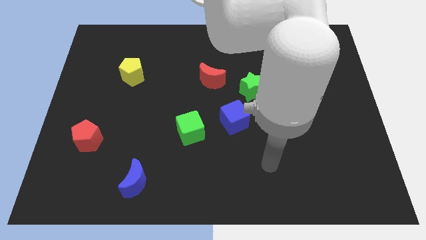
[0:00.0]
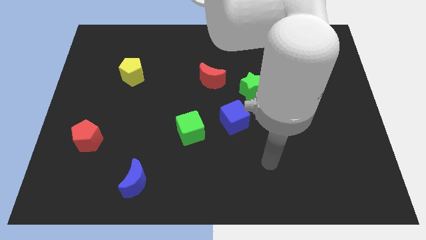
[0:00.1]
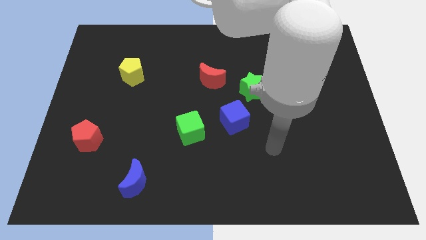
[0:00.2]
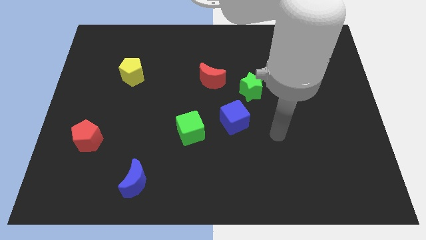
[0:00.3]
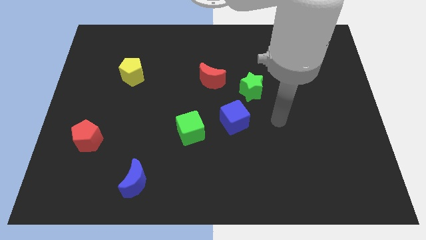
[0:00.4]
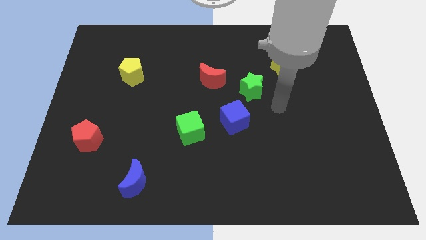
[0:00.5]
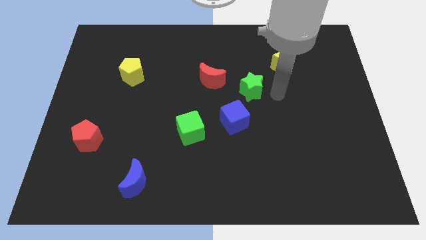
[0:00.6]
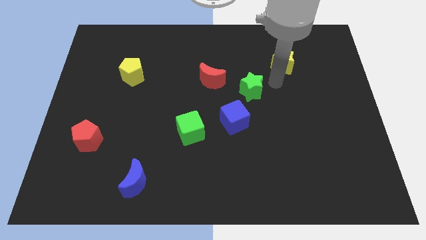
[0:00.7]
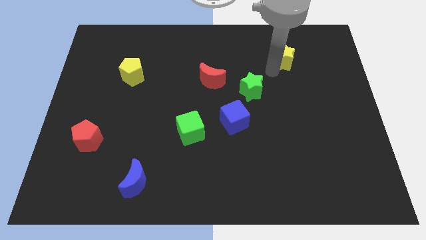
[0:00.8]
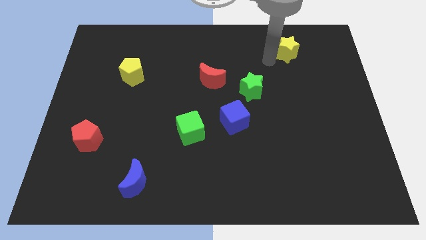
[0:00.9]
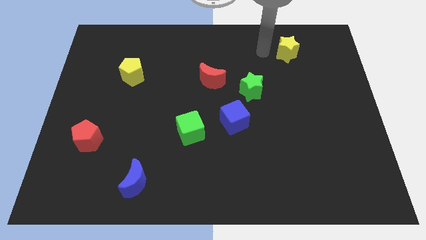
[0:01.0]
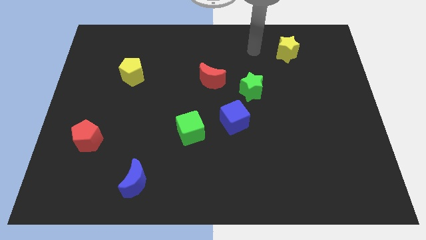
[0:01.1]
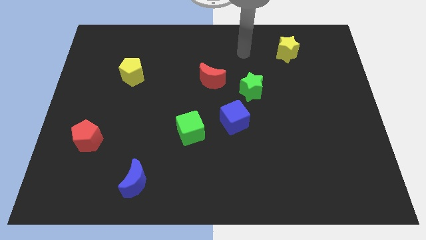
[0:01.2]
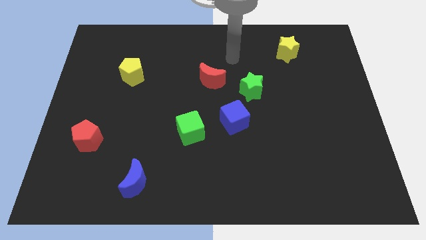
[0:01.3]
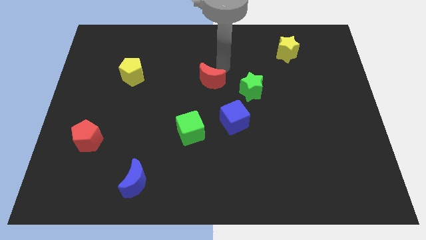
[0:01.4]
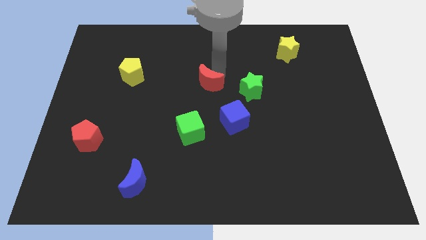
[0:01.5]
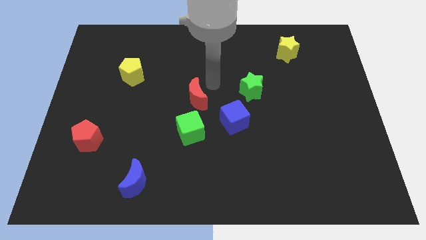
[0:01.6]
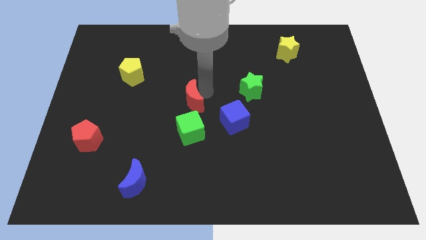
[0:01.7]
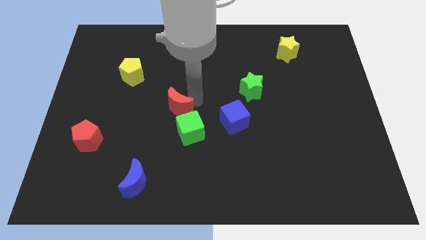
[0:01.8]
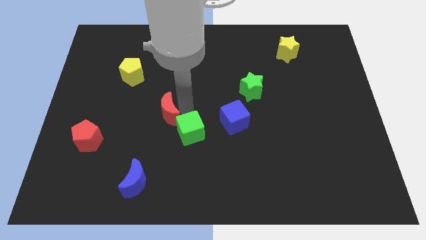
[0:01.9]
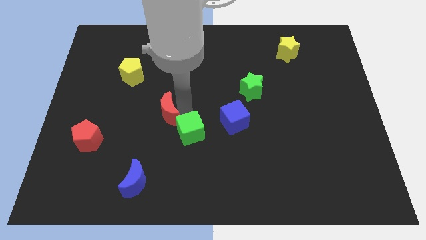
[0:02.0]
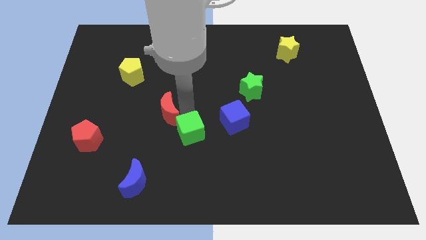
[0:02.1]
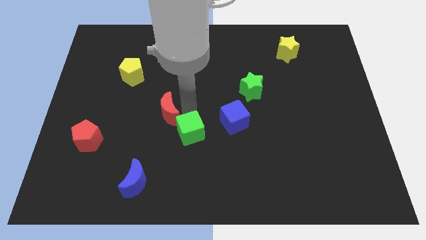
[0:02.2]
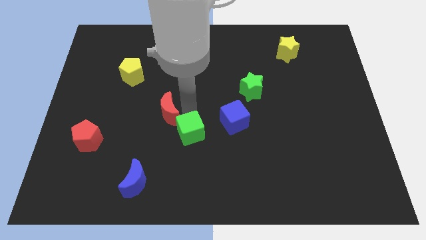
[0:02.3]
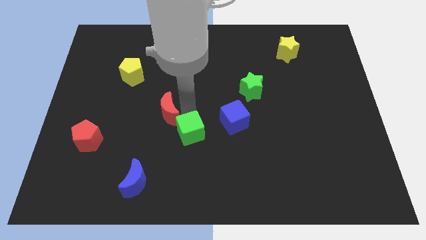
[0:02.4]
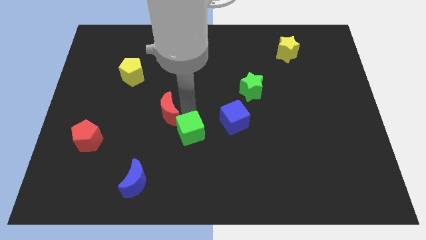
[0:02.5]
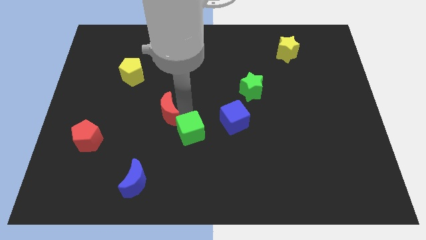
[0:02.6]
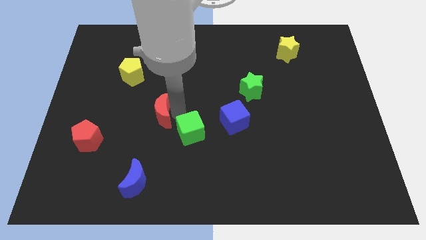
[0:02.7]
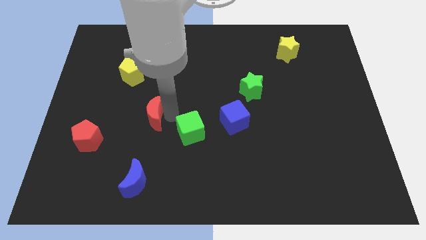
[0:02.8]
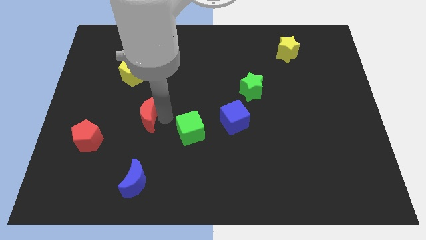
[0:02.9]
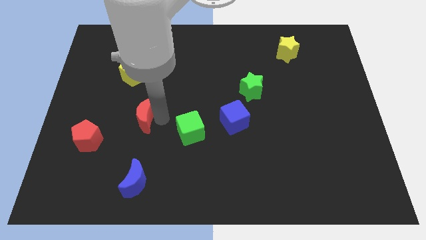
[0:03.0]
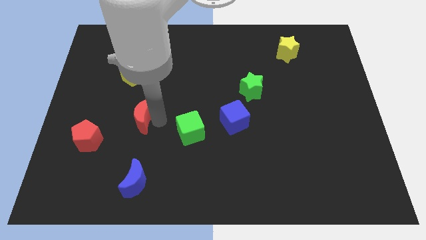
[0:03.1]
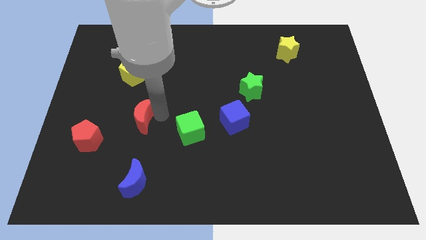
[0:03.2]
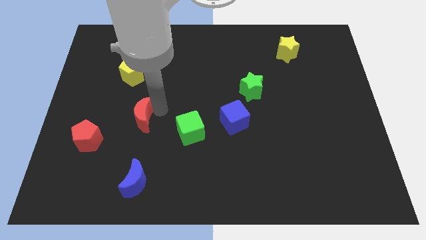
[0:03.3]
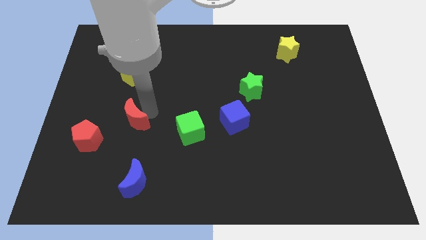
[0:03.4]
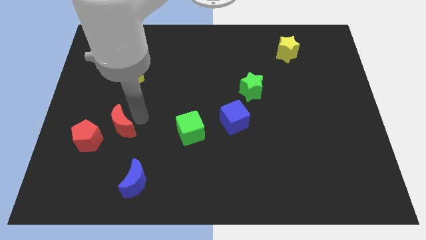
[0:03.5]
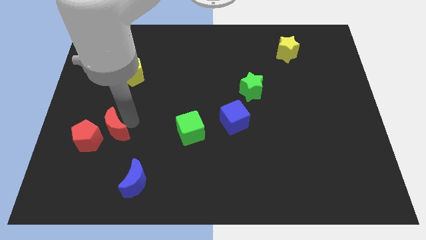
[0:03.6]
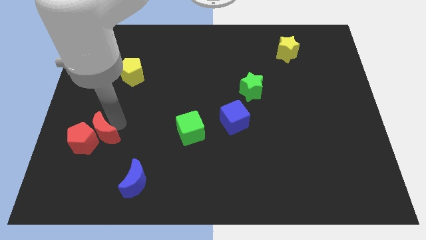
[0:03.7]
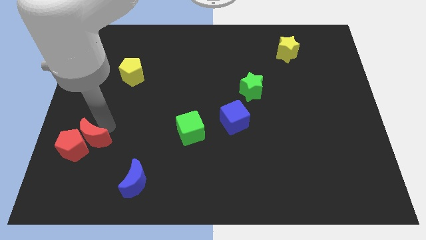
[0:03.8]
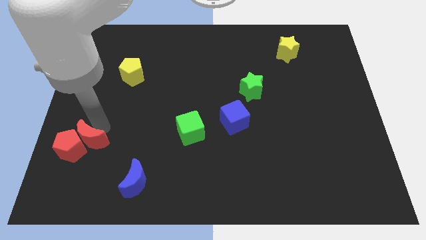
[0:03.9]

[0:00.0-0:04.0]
move the red moon into the red pentagon

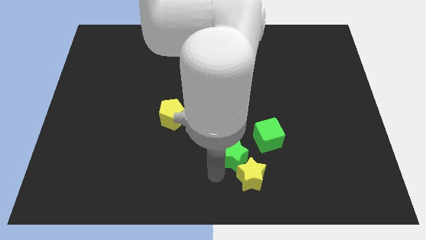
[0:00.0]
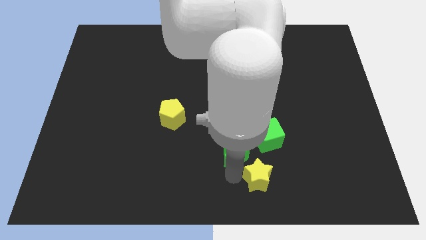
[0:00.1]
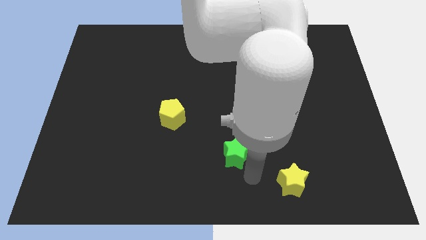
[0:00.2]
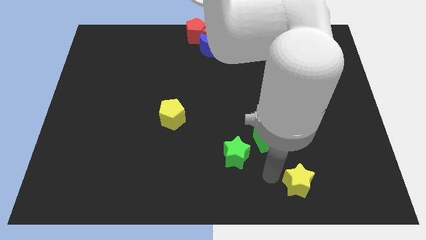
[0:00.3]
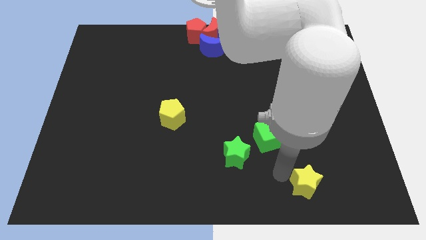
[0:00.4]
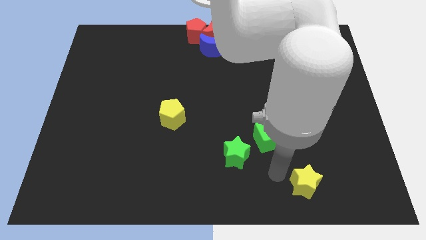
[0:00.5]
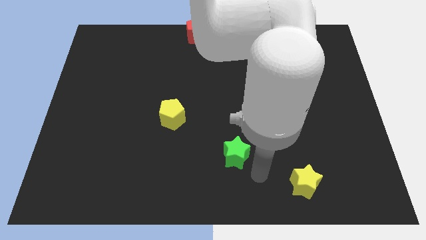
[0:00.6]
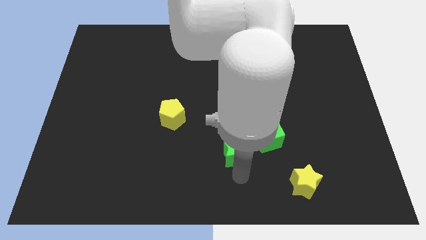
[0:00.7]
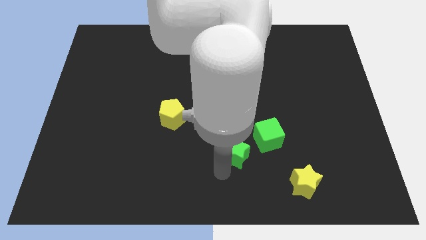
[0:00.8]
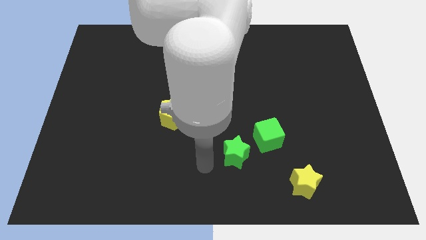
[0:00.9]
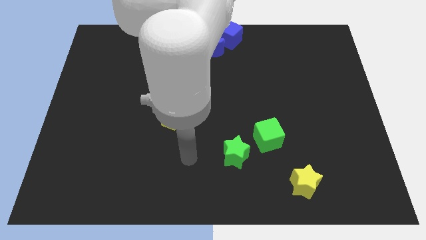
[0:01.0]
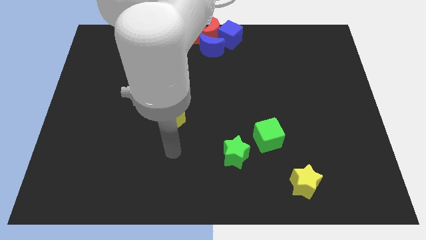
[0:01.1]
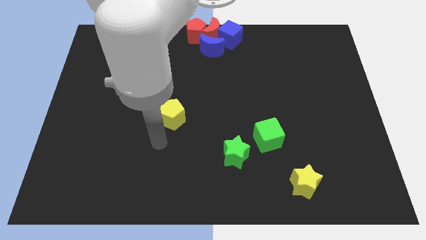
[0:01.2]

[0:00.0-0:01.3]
separate yellow star from the green star

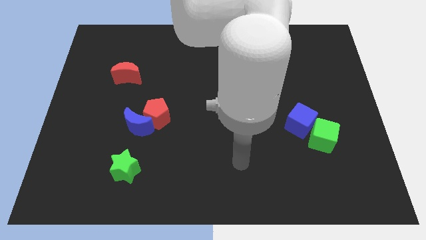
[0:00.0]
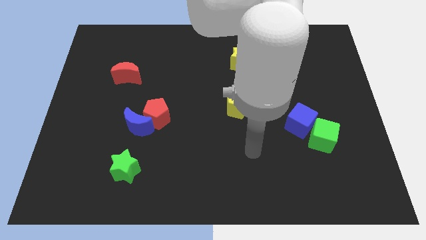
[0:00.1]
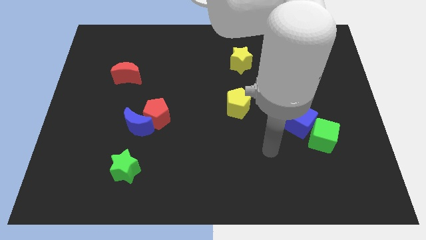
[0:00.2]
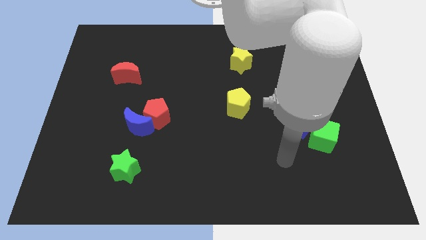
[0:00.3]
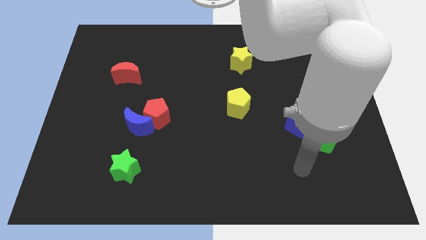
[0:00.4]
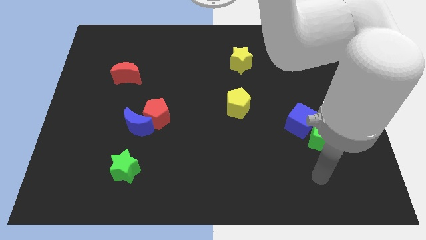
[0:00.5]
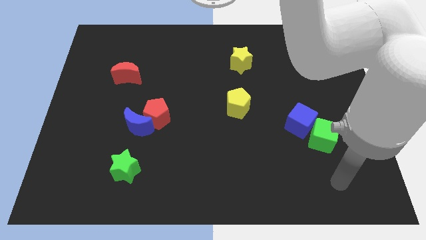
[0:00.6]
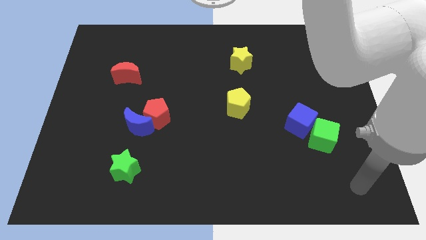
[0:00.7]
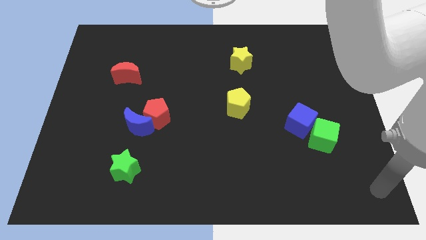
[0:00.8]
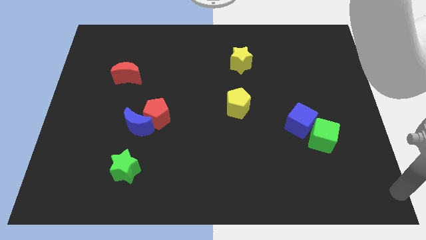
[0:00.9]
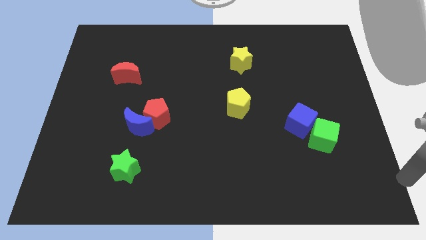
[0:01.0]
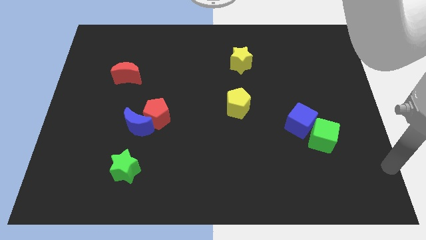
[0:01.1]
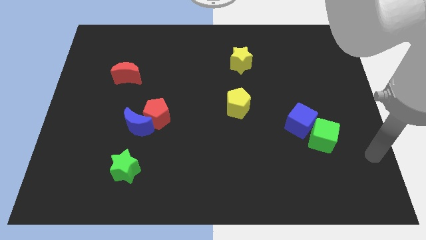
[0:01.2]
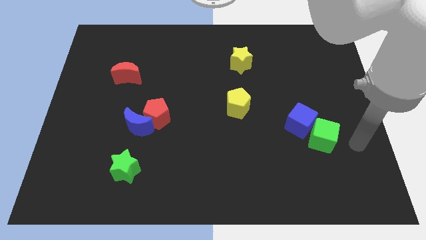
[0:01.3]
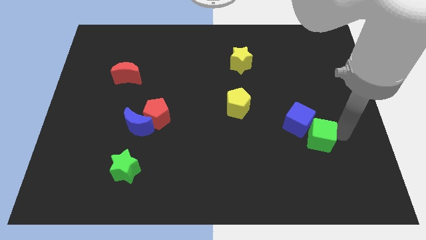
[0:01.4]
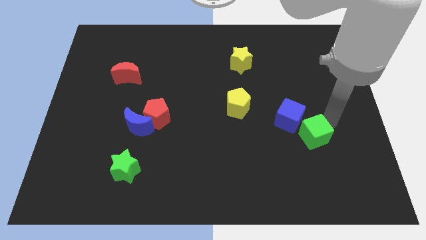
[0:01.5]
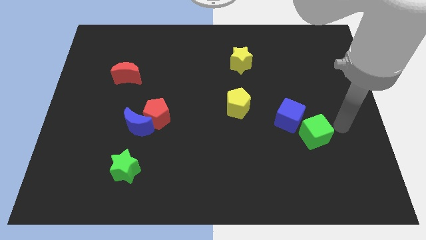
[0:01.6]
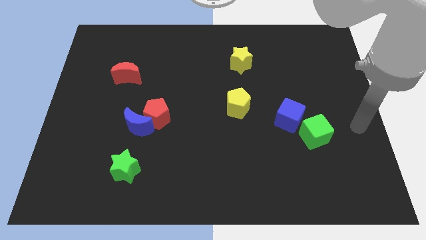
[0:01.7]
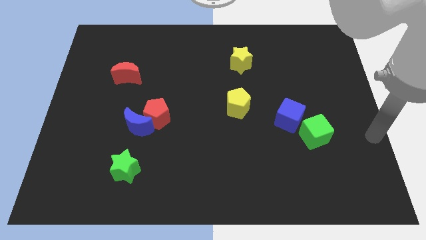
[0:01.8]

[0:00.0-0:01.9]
push the green cube towards the blue cube slightly

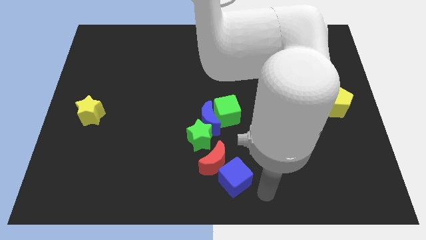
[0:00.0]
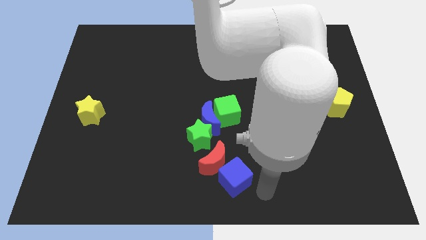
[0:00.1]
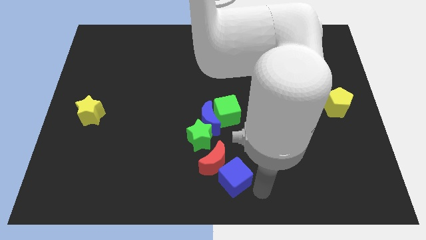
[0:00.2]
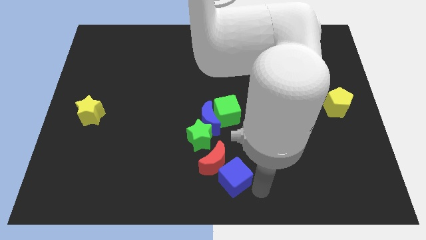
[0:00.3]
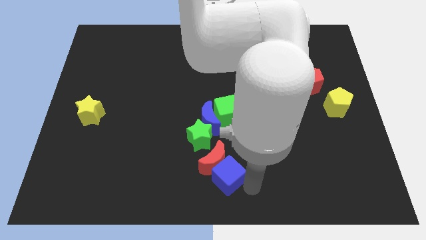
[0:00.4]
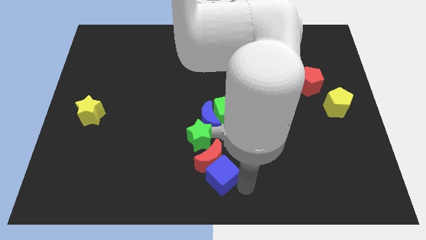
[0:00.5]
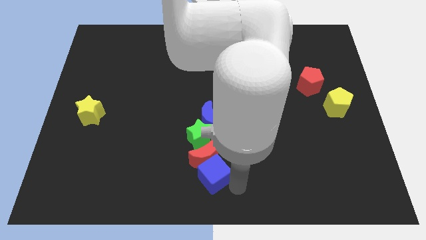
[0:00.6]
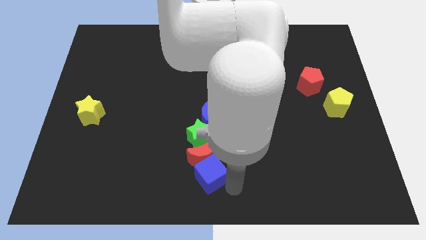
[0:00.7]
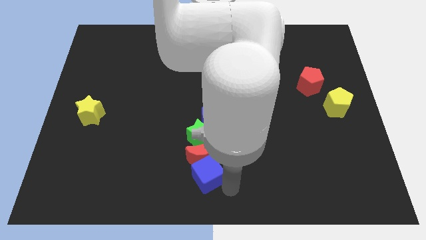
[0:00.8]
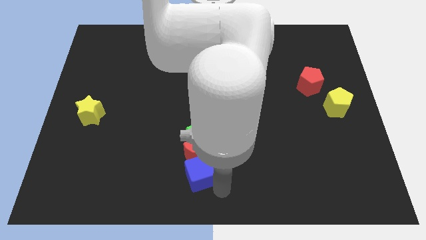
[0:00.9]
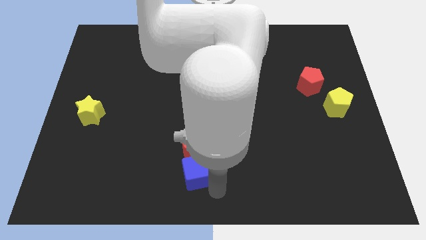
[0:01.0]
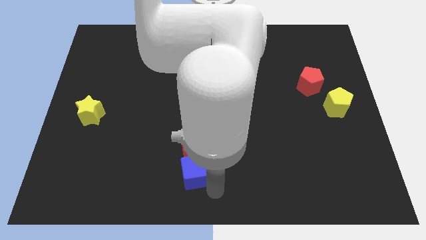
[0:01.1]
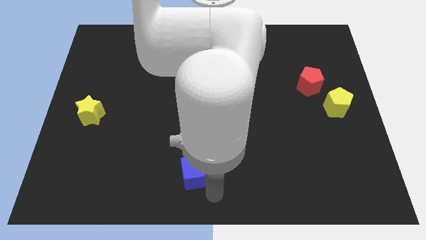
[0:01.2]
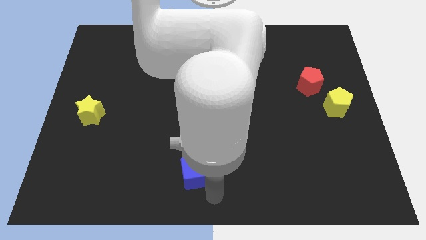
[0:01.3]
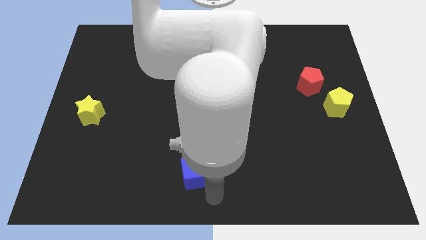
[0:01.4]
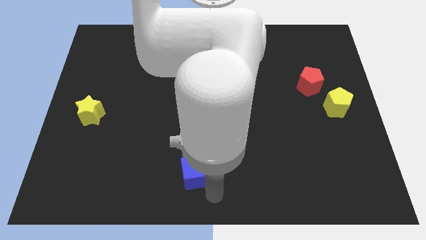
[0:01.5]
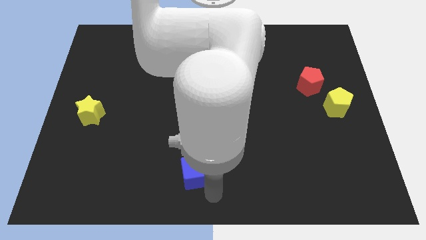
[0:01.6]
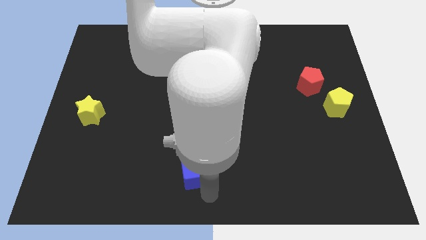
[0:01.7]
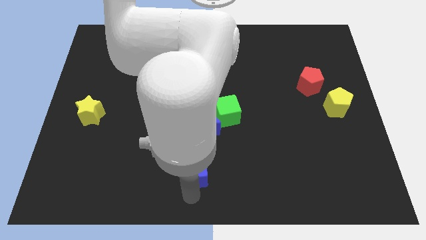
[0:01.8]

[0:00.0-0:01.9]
push blue cube into red moon
